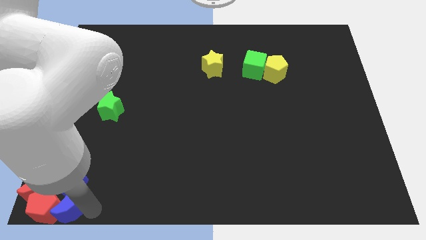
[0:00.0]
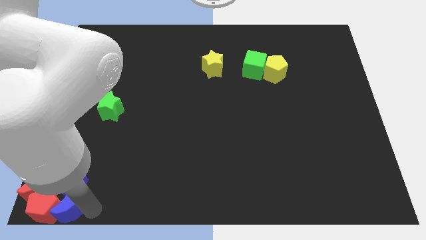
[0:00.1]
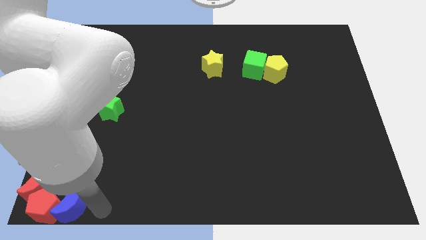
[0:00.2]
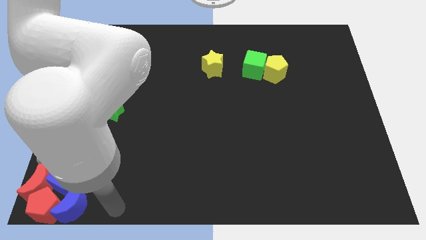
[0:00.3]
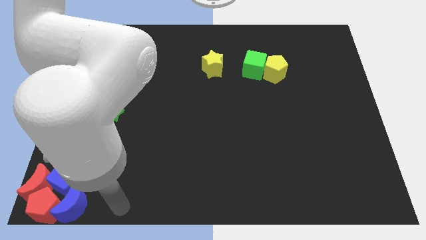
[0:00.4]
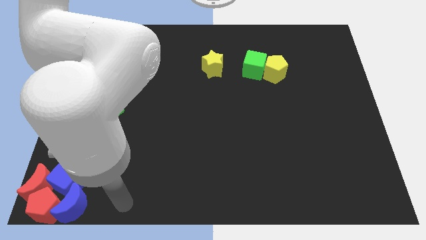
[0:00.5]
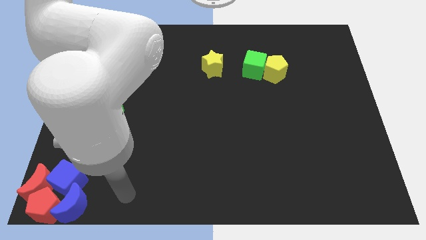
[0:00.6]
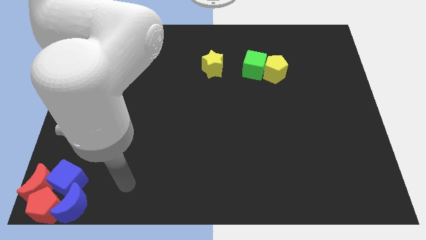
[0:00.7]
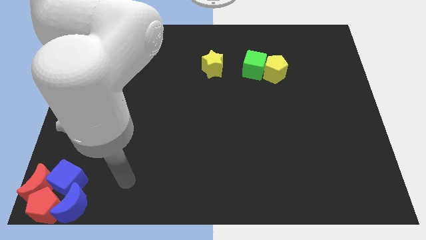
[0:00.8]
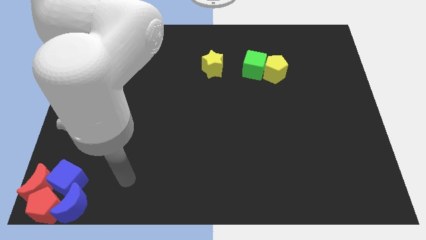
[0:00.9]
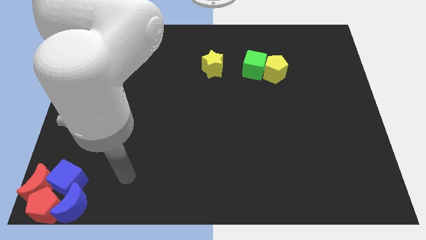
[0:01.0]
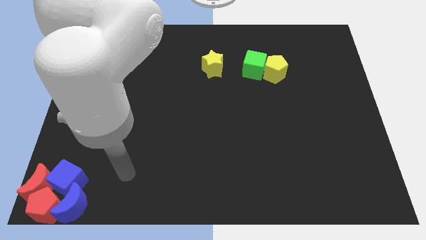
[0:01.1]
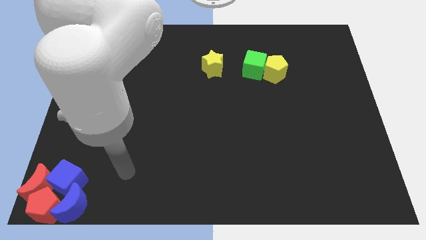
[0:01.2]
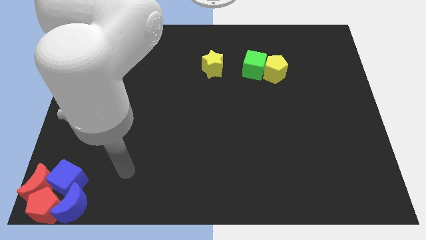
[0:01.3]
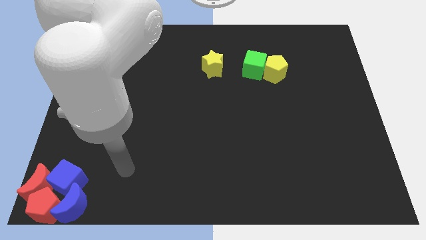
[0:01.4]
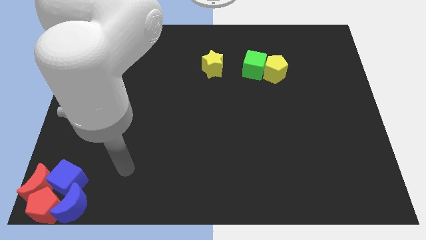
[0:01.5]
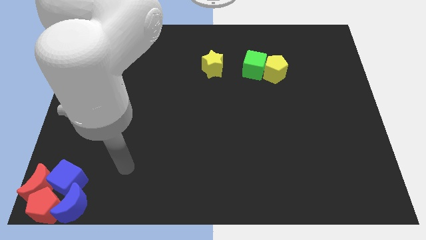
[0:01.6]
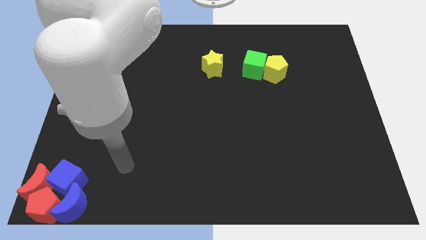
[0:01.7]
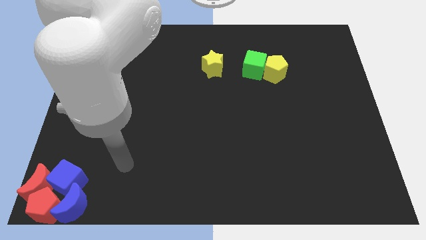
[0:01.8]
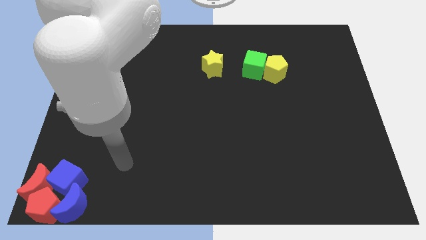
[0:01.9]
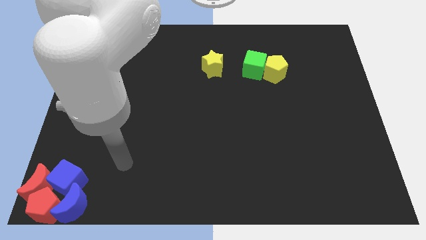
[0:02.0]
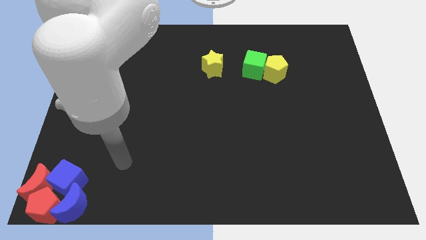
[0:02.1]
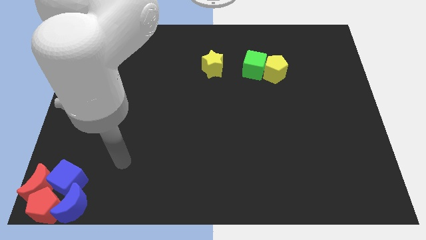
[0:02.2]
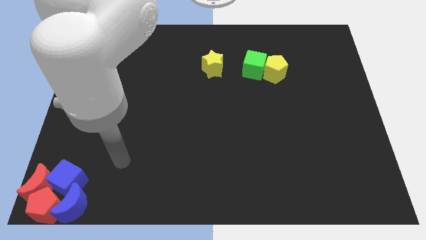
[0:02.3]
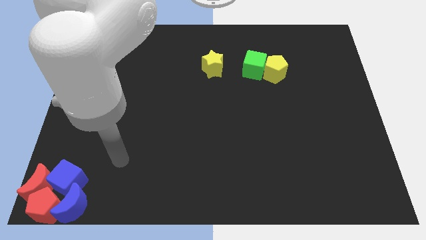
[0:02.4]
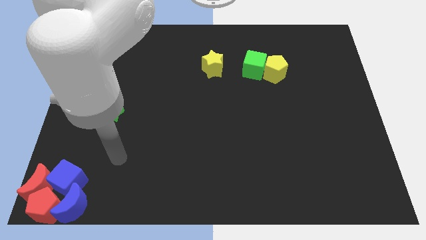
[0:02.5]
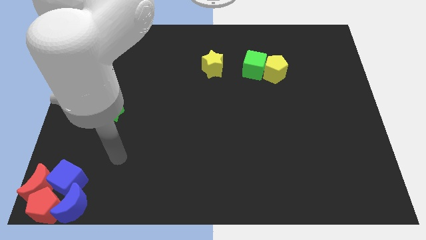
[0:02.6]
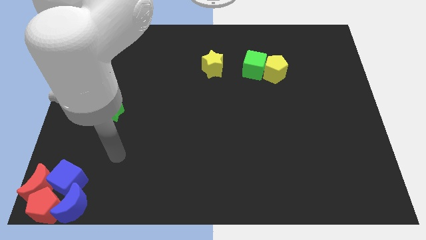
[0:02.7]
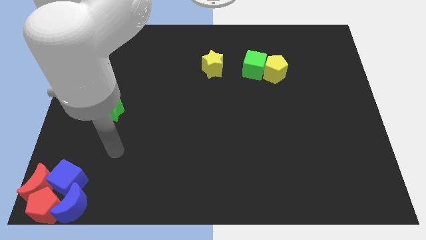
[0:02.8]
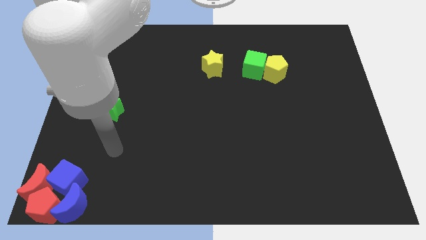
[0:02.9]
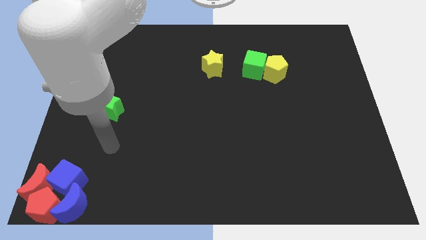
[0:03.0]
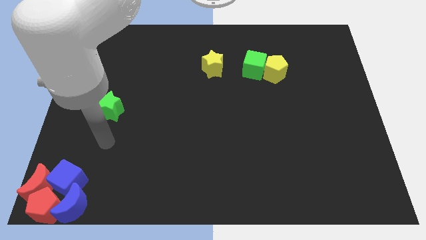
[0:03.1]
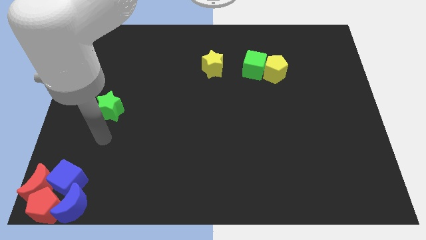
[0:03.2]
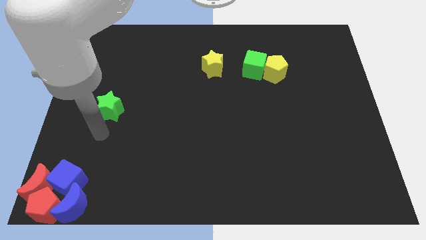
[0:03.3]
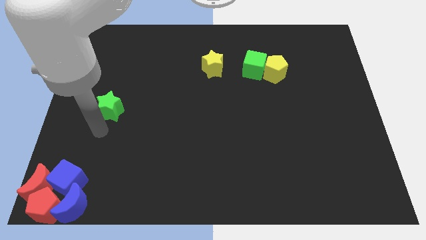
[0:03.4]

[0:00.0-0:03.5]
move your arm and point below the green star

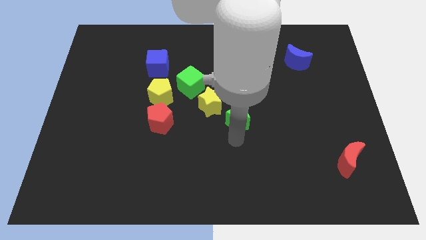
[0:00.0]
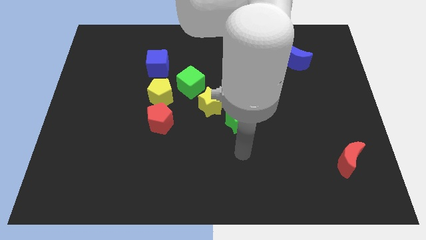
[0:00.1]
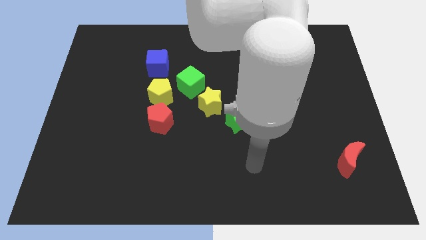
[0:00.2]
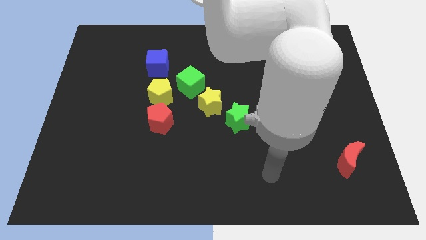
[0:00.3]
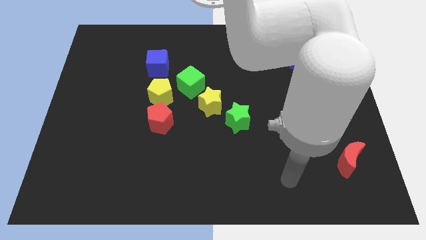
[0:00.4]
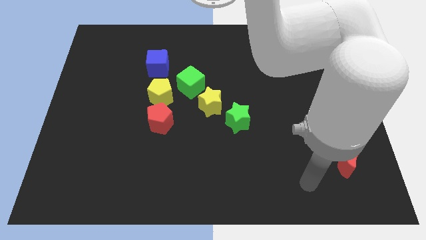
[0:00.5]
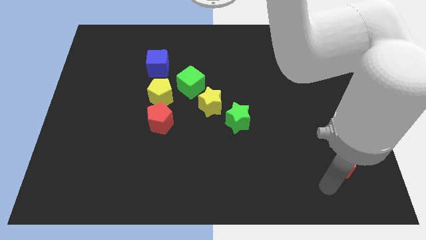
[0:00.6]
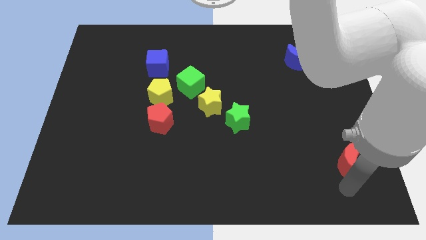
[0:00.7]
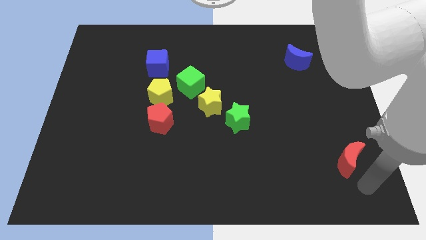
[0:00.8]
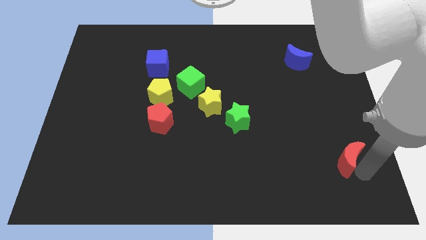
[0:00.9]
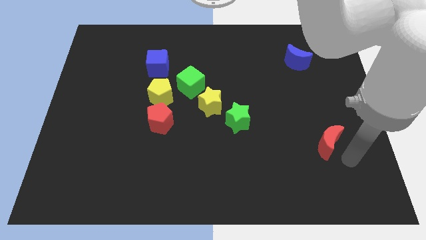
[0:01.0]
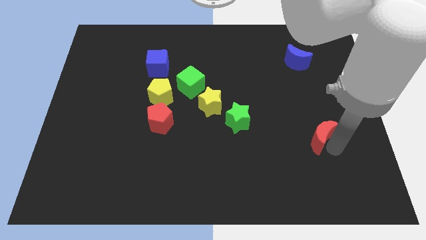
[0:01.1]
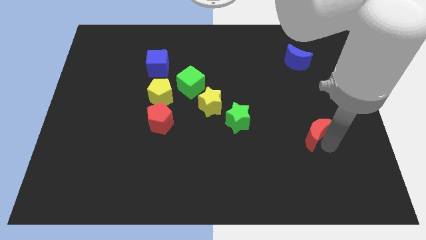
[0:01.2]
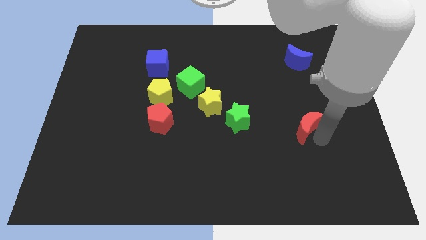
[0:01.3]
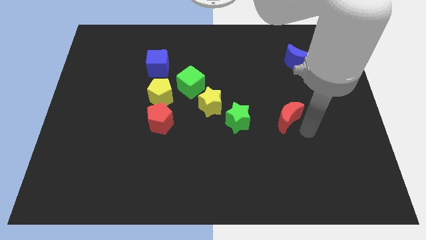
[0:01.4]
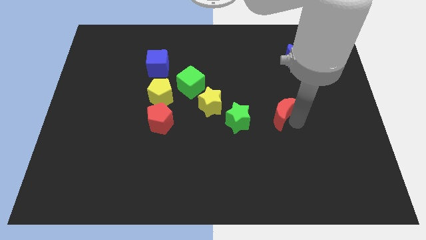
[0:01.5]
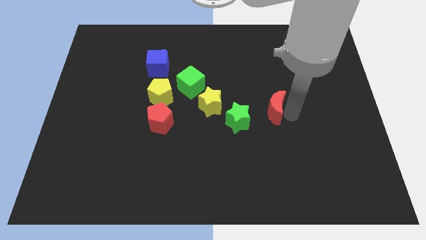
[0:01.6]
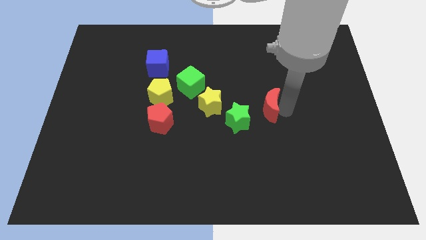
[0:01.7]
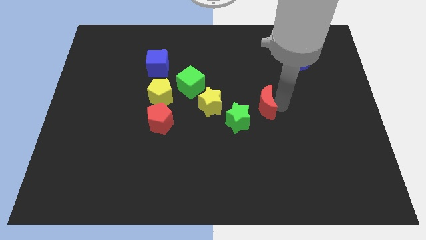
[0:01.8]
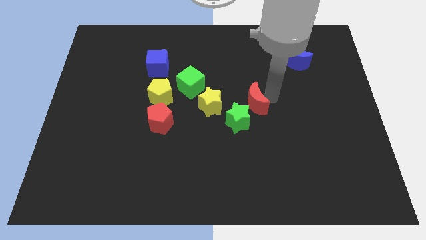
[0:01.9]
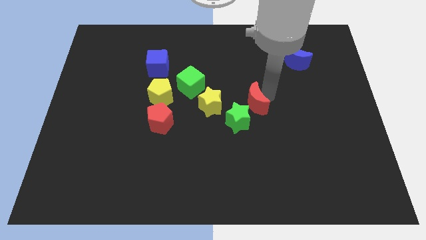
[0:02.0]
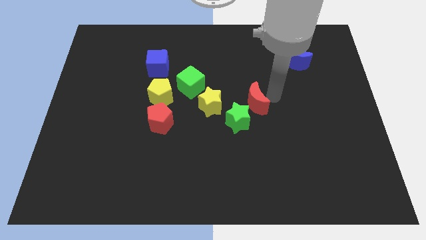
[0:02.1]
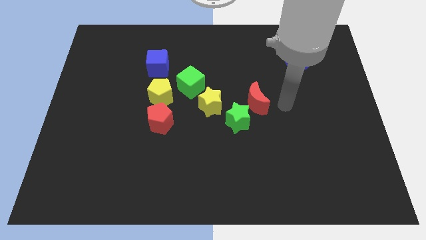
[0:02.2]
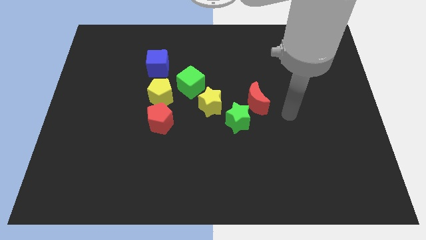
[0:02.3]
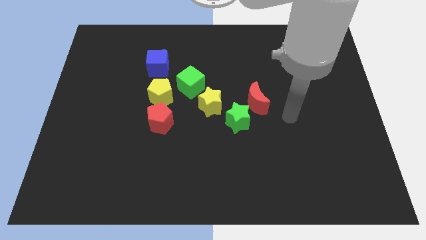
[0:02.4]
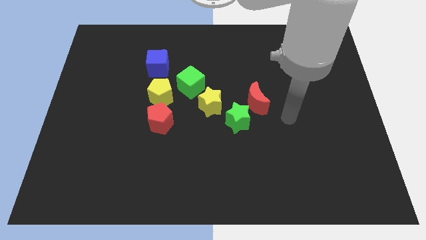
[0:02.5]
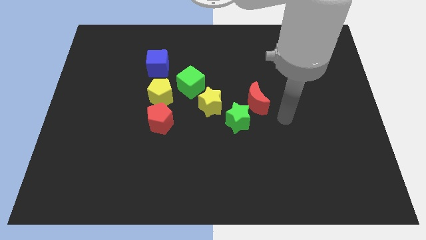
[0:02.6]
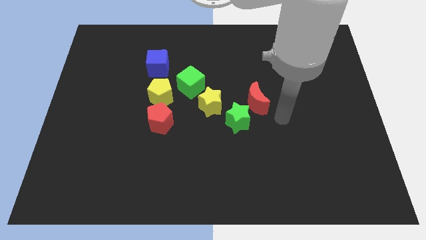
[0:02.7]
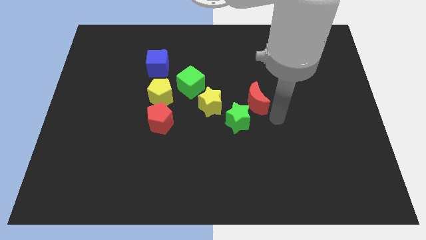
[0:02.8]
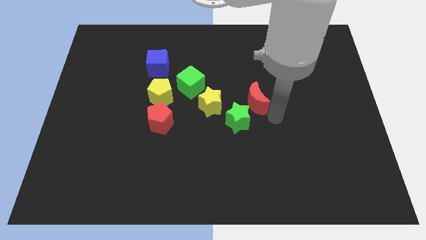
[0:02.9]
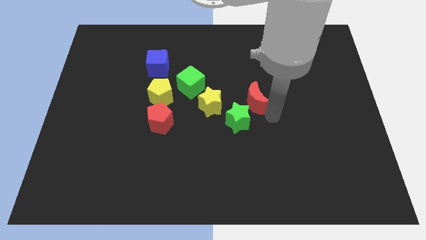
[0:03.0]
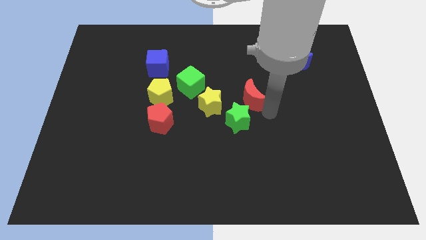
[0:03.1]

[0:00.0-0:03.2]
move the red crescent to the top right of the green star

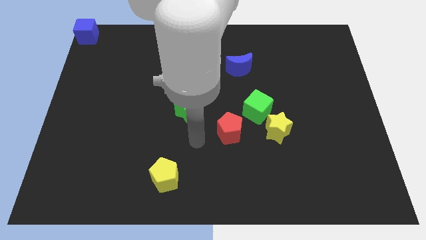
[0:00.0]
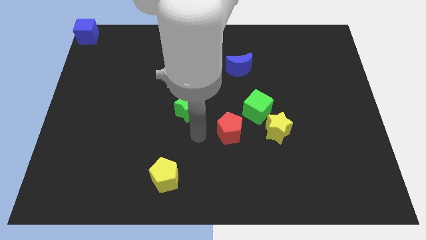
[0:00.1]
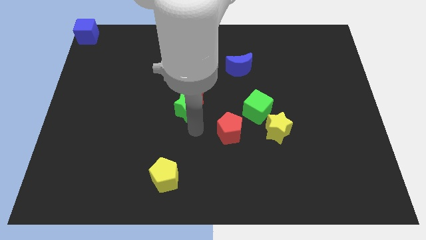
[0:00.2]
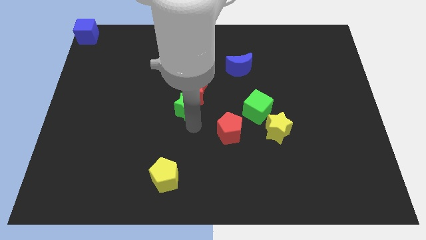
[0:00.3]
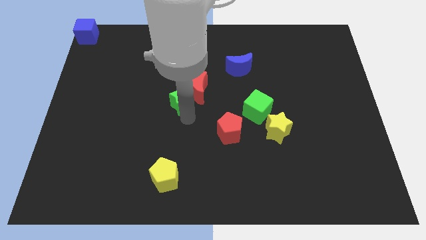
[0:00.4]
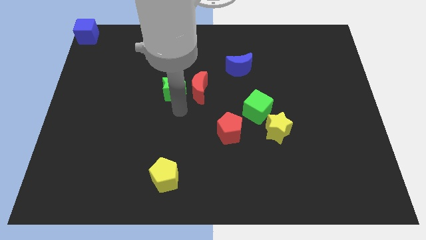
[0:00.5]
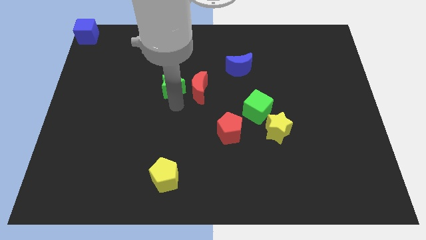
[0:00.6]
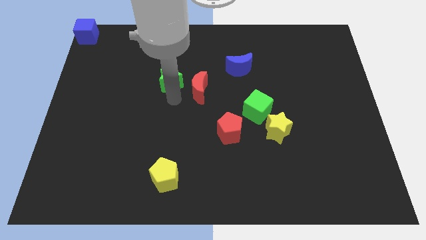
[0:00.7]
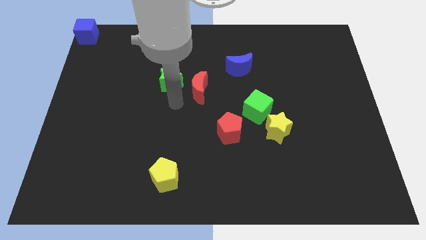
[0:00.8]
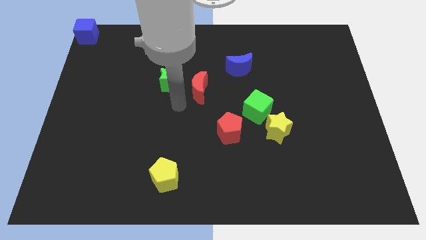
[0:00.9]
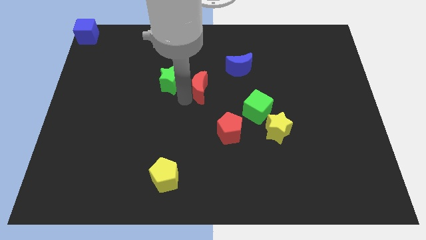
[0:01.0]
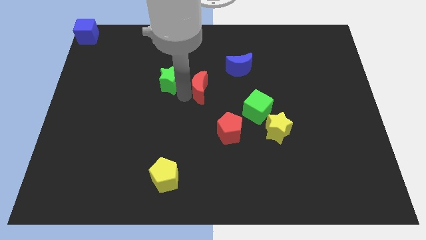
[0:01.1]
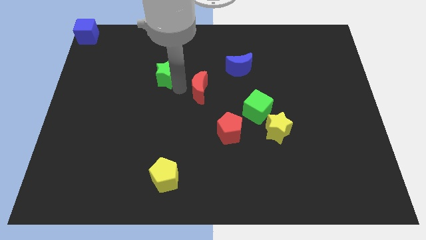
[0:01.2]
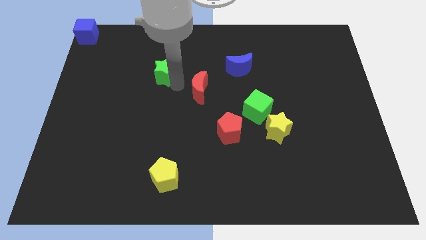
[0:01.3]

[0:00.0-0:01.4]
push green star slightly to the top of the board

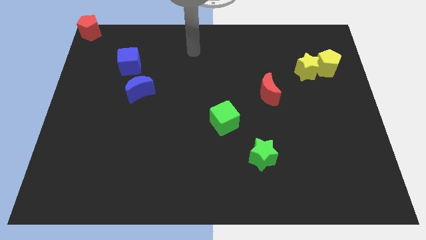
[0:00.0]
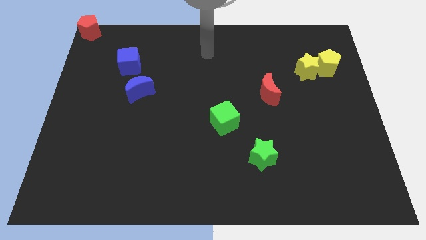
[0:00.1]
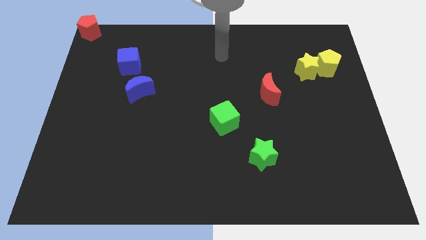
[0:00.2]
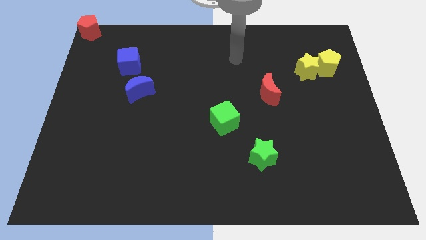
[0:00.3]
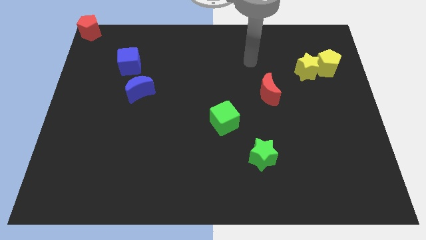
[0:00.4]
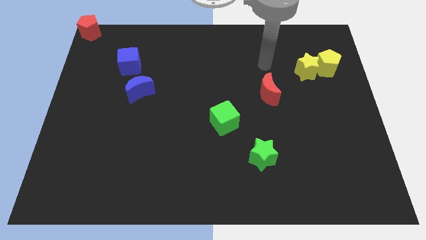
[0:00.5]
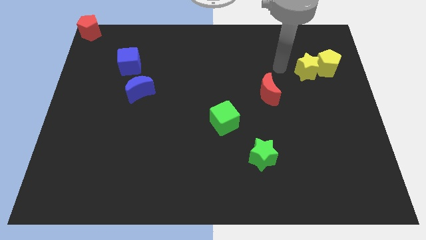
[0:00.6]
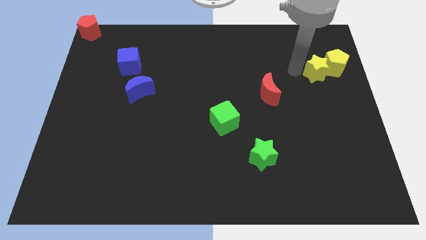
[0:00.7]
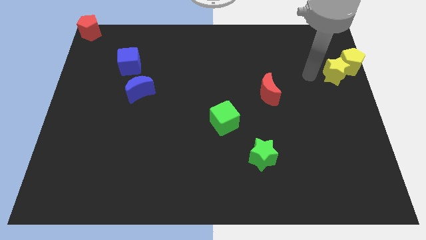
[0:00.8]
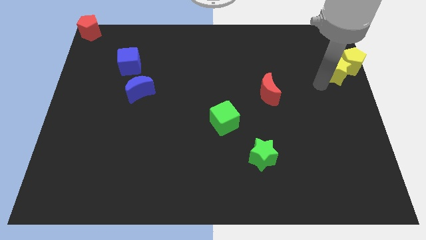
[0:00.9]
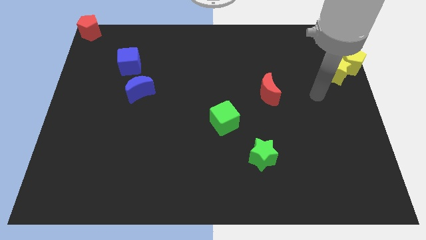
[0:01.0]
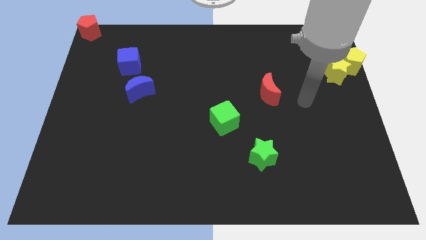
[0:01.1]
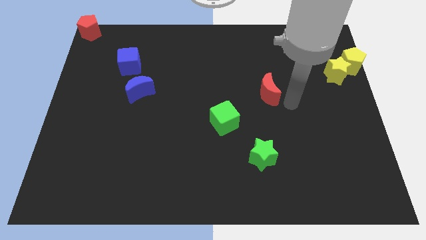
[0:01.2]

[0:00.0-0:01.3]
push the group of yellow blocks slightly to the right side
